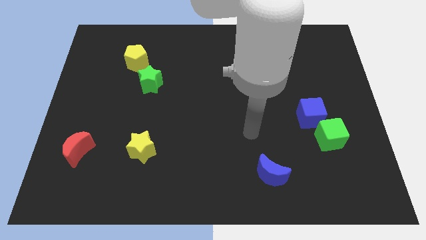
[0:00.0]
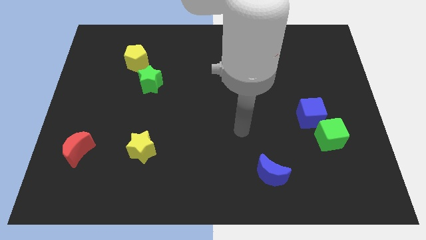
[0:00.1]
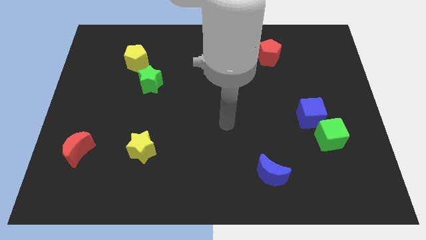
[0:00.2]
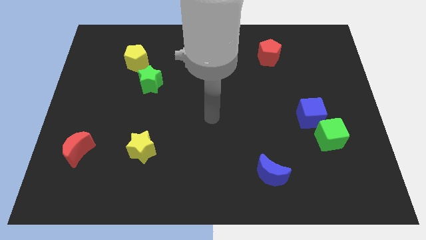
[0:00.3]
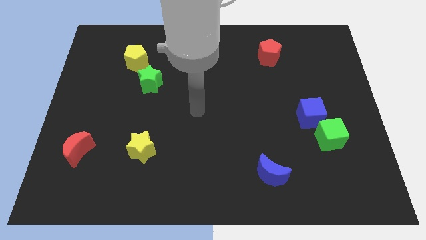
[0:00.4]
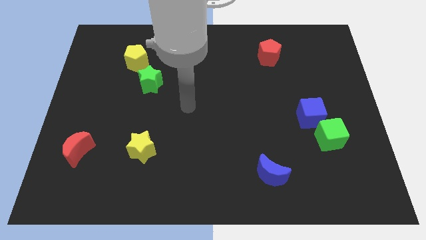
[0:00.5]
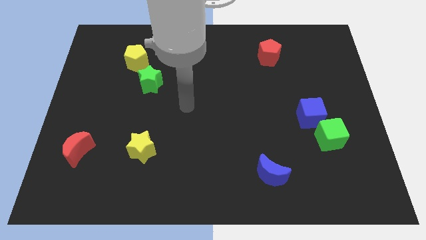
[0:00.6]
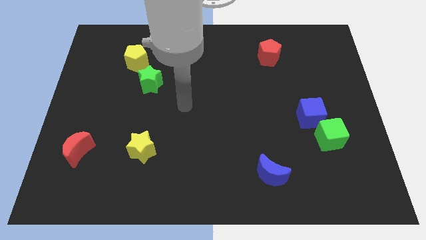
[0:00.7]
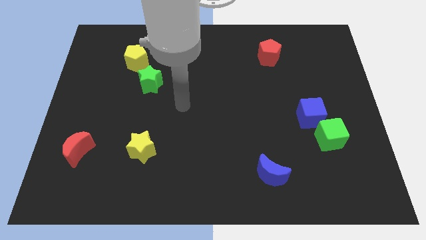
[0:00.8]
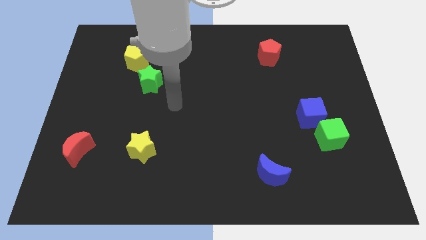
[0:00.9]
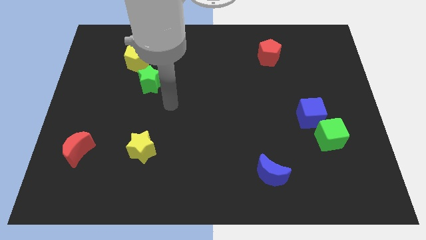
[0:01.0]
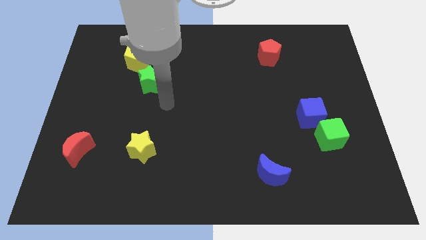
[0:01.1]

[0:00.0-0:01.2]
move your hand towards green star

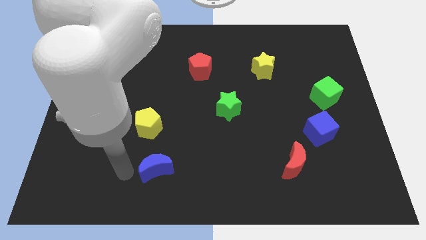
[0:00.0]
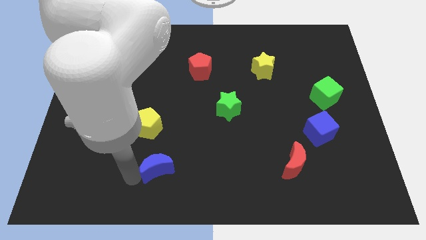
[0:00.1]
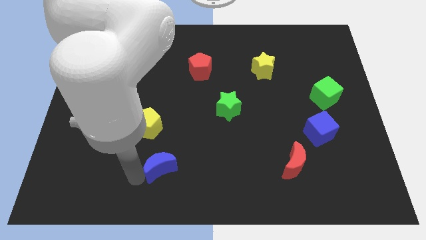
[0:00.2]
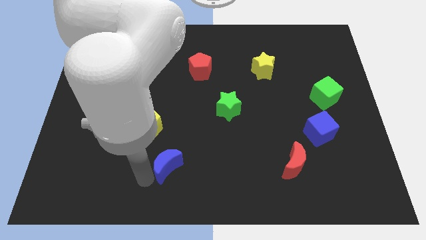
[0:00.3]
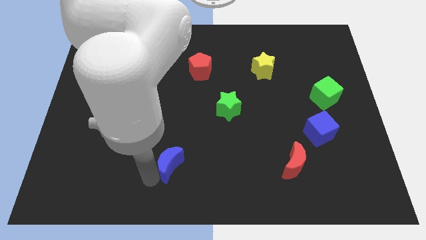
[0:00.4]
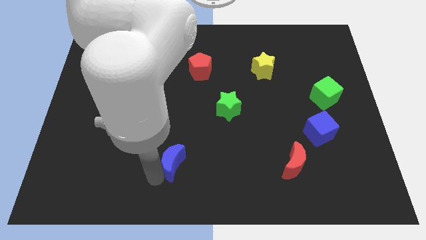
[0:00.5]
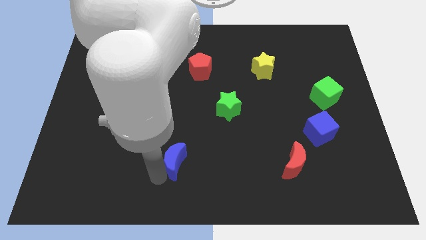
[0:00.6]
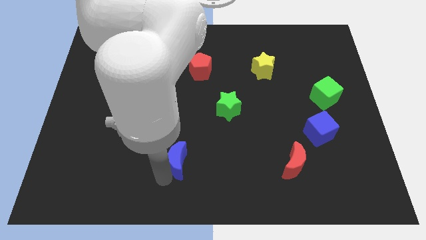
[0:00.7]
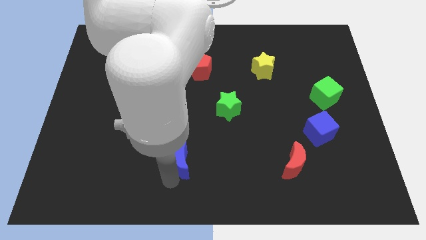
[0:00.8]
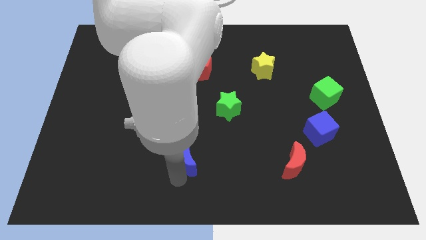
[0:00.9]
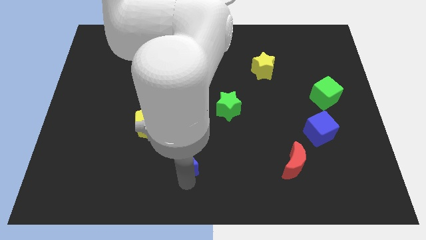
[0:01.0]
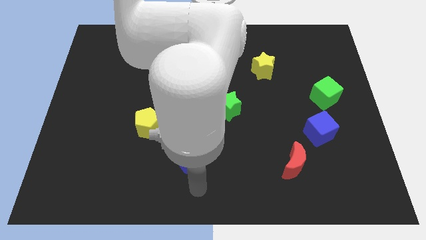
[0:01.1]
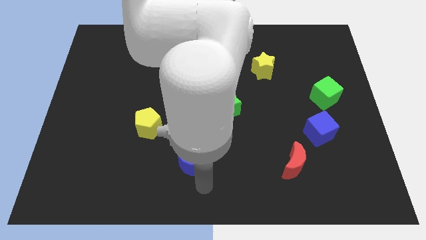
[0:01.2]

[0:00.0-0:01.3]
turn the blue moon in an anticlockwise direction

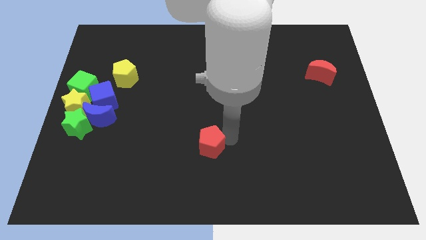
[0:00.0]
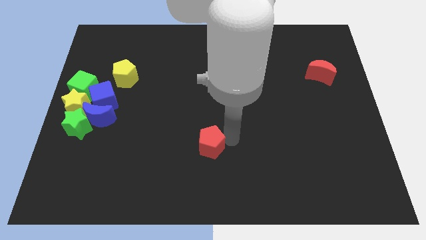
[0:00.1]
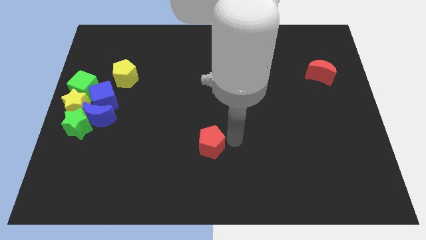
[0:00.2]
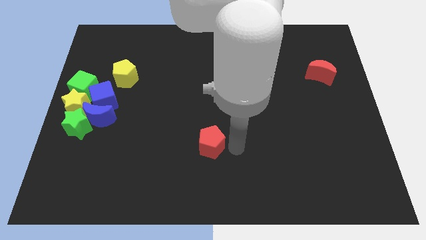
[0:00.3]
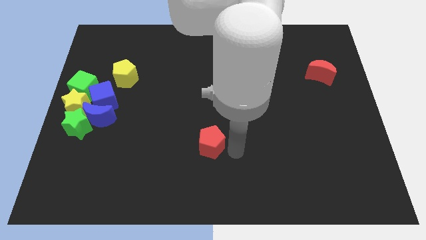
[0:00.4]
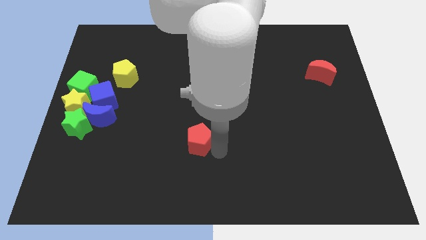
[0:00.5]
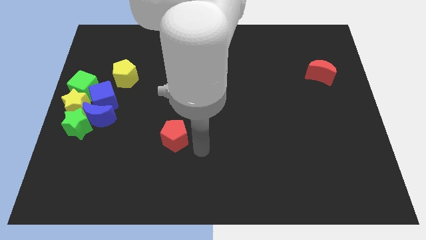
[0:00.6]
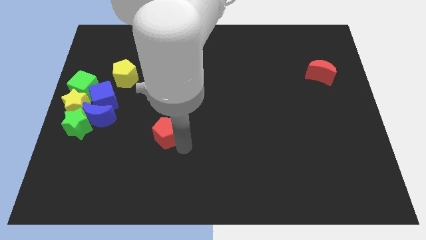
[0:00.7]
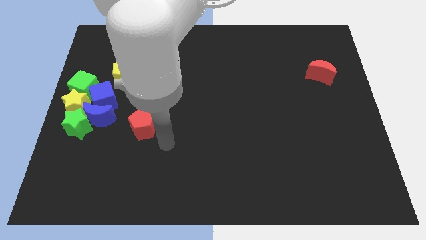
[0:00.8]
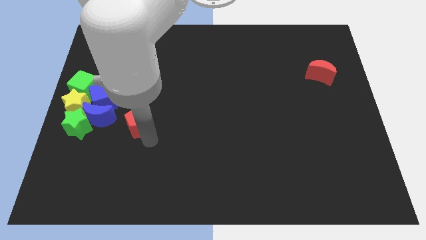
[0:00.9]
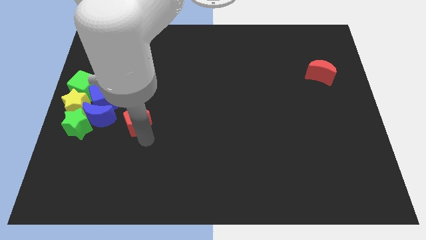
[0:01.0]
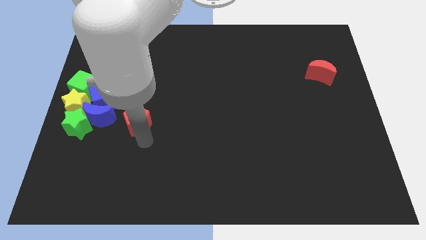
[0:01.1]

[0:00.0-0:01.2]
move the red pentagon right to the blue moon

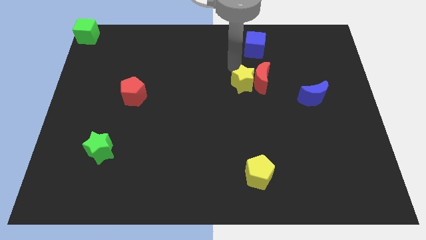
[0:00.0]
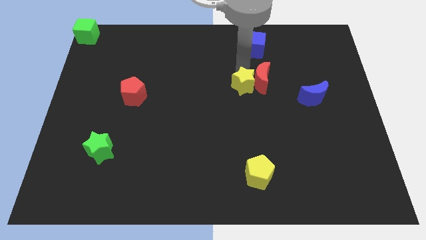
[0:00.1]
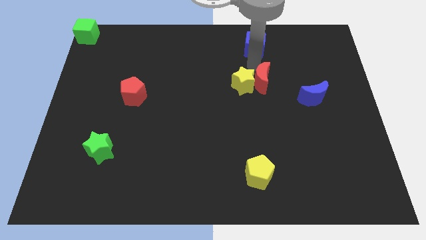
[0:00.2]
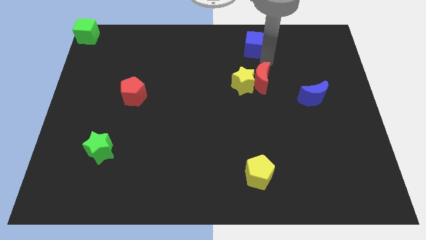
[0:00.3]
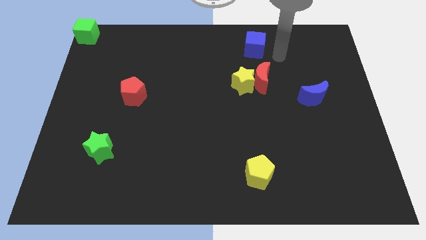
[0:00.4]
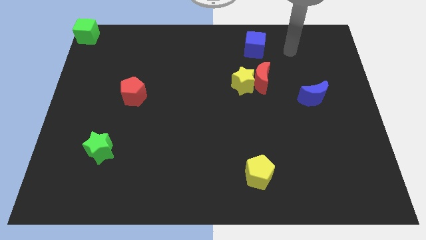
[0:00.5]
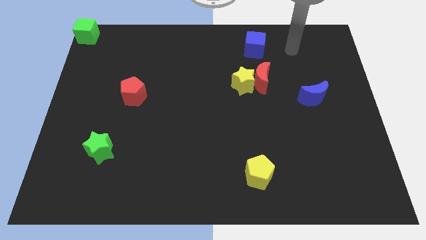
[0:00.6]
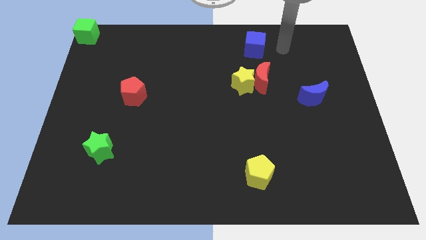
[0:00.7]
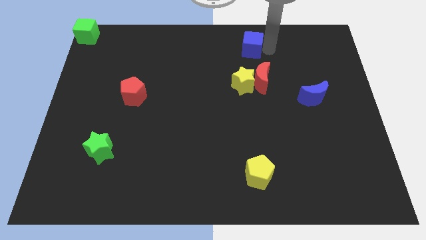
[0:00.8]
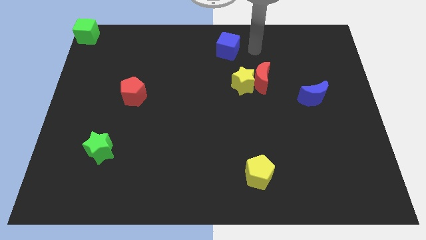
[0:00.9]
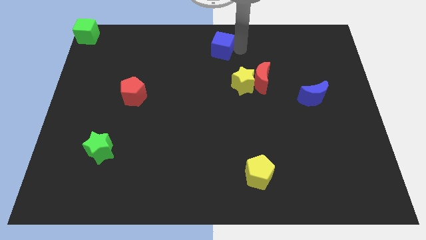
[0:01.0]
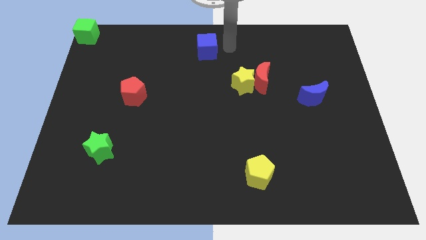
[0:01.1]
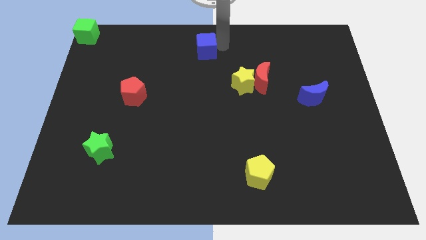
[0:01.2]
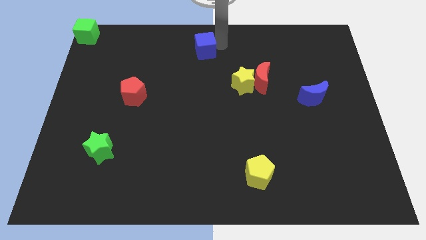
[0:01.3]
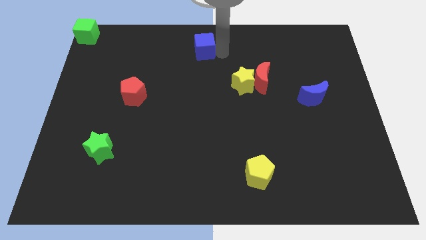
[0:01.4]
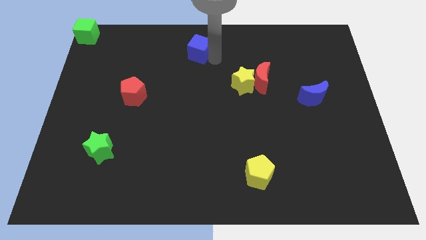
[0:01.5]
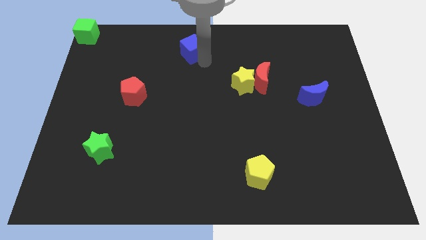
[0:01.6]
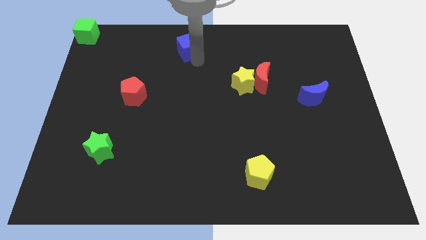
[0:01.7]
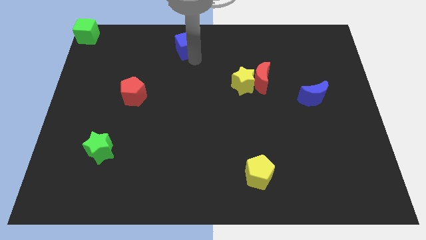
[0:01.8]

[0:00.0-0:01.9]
push the blue cube towards the left of the board

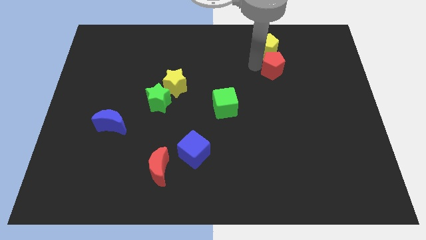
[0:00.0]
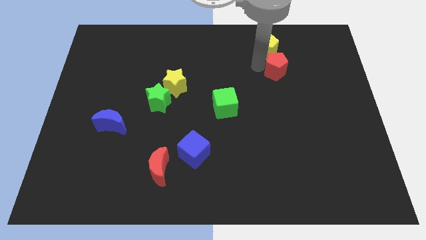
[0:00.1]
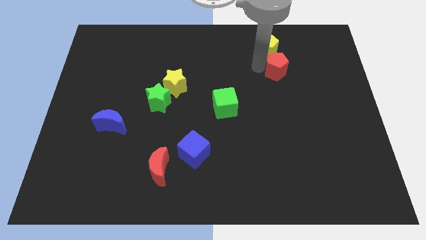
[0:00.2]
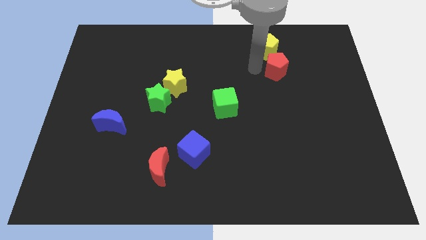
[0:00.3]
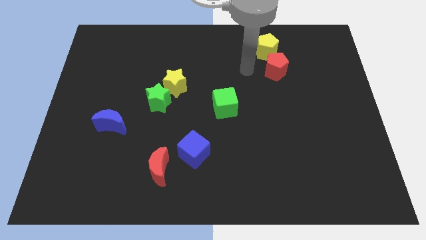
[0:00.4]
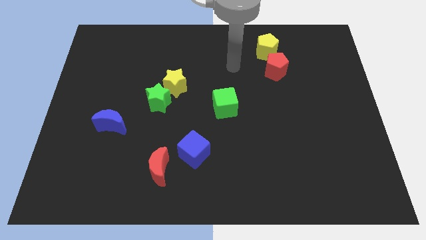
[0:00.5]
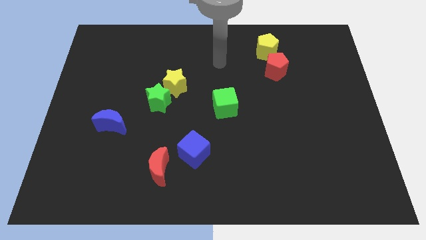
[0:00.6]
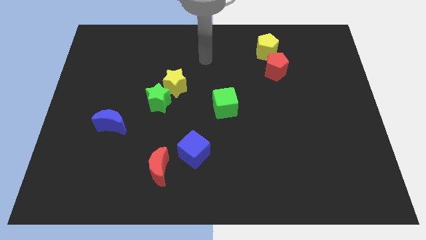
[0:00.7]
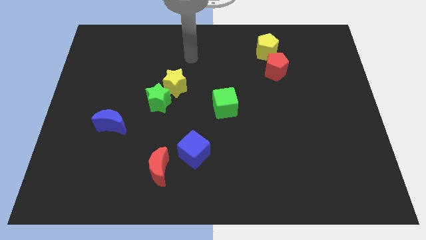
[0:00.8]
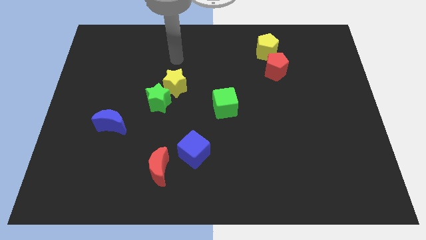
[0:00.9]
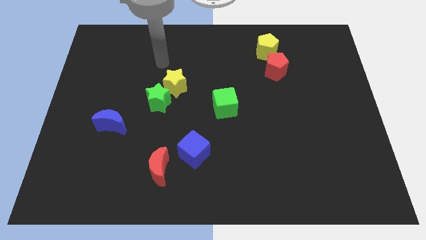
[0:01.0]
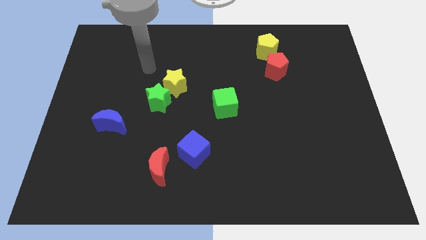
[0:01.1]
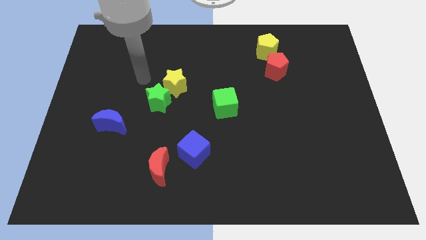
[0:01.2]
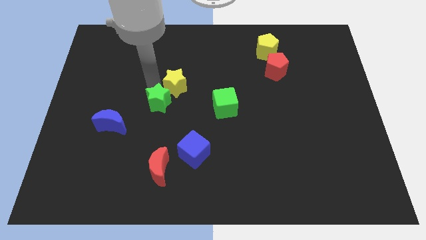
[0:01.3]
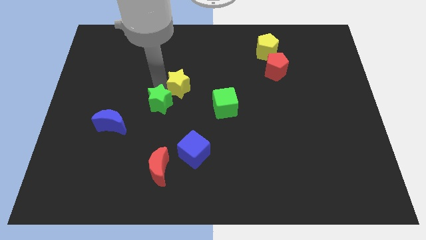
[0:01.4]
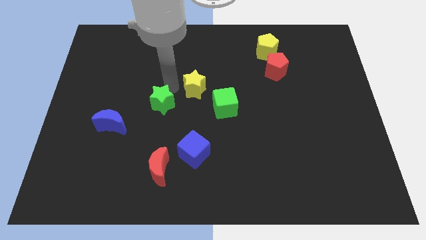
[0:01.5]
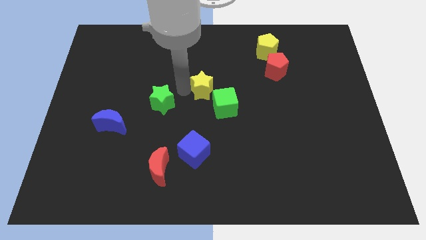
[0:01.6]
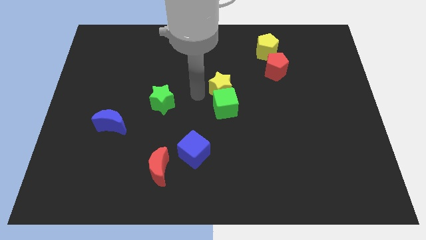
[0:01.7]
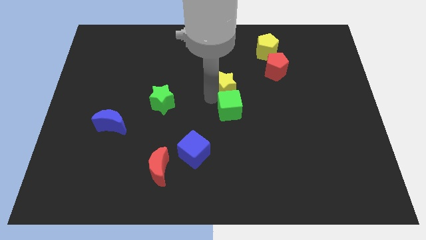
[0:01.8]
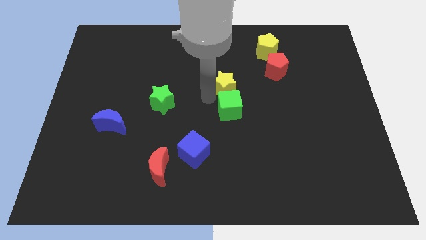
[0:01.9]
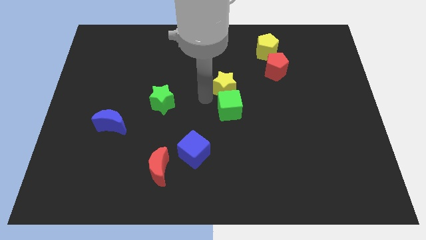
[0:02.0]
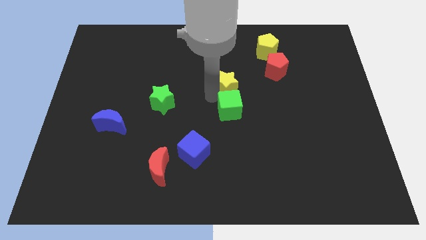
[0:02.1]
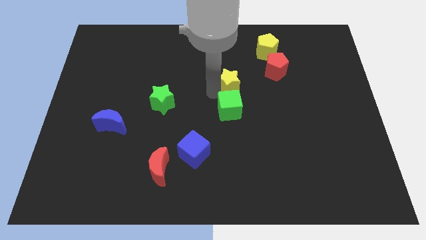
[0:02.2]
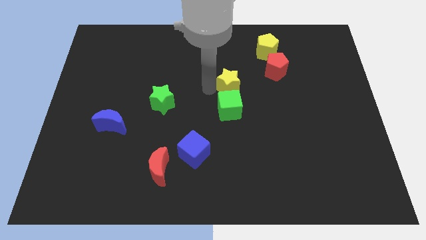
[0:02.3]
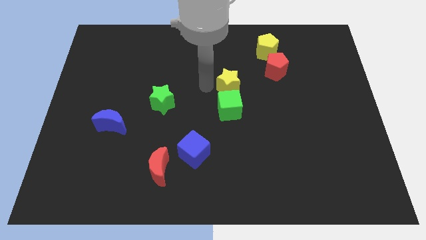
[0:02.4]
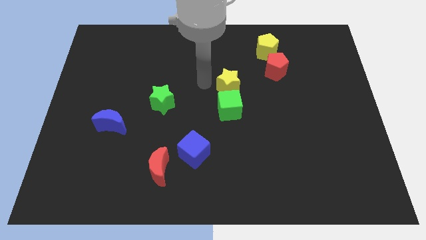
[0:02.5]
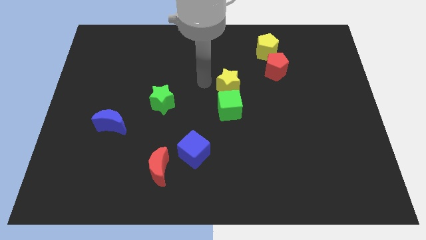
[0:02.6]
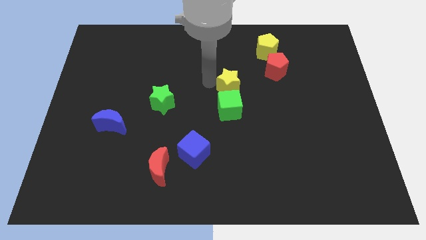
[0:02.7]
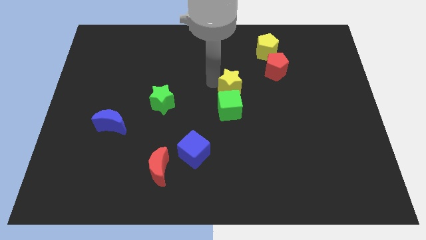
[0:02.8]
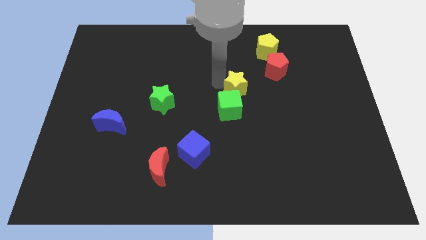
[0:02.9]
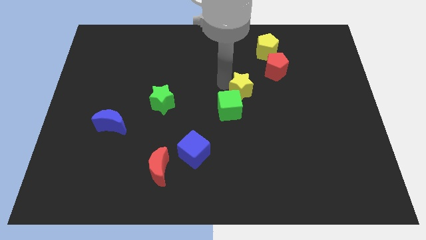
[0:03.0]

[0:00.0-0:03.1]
push the yellow star to the top of green cube
